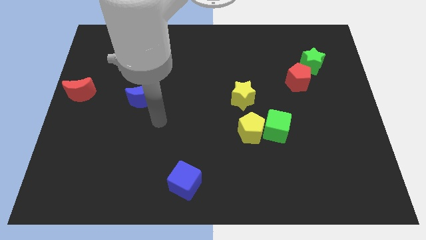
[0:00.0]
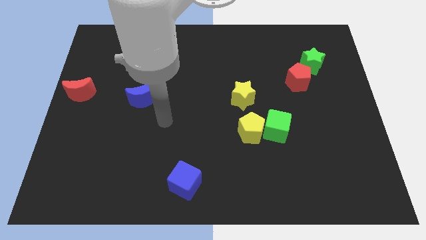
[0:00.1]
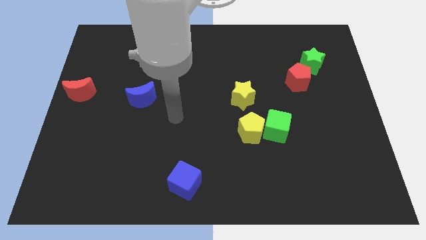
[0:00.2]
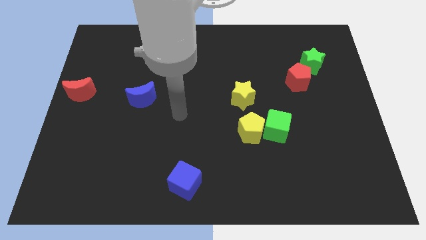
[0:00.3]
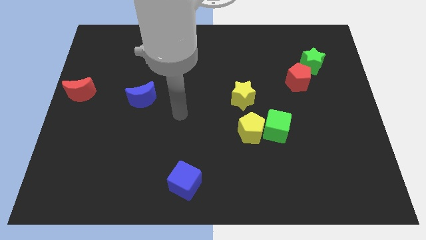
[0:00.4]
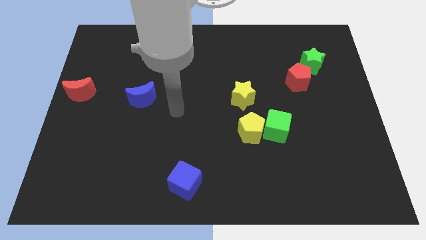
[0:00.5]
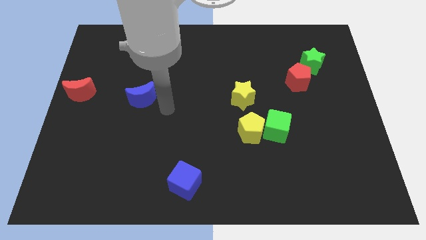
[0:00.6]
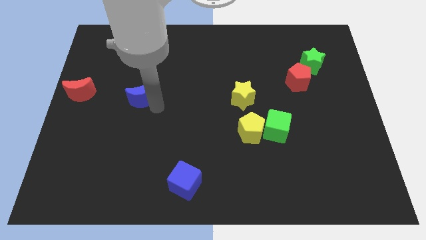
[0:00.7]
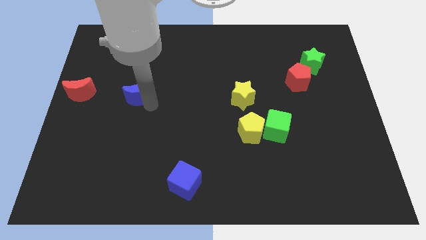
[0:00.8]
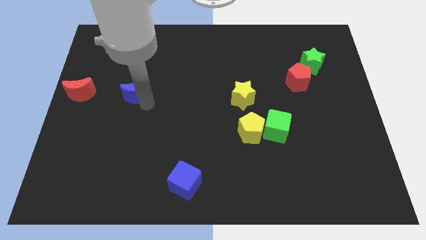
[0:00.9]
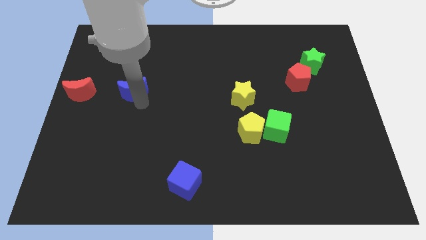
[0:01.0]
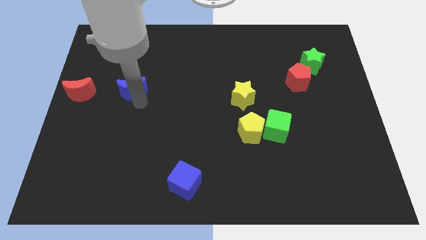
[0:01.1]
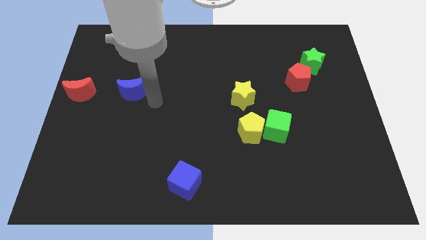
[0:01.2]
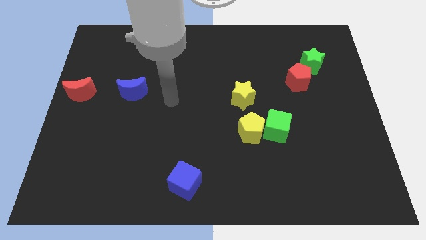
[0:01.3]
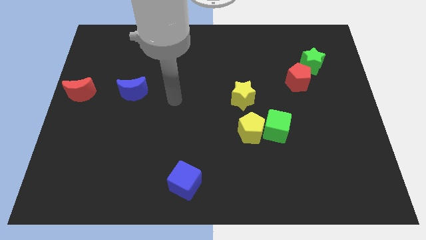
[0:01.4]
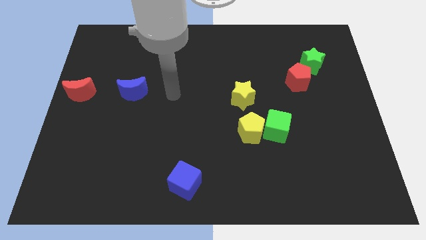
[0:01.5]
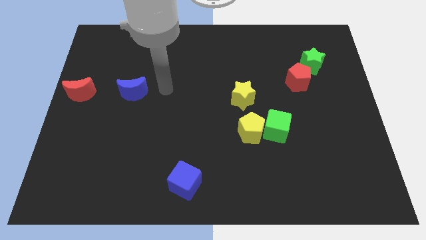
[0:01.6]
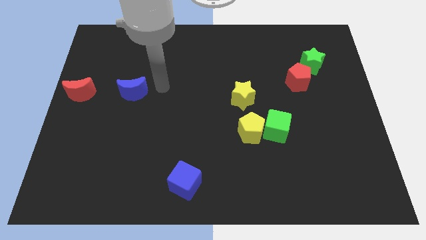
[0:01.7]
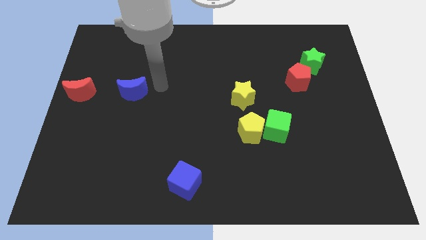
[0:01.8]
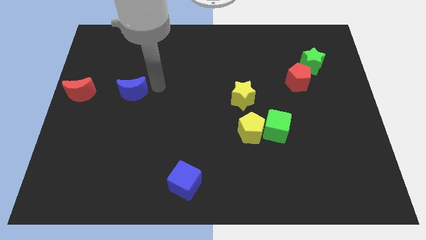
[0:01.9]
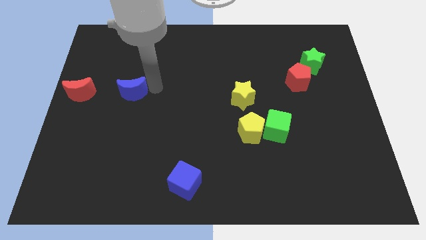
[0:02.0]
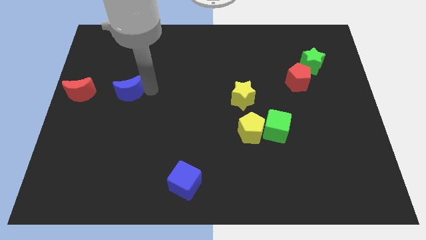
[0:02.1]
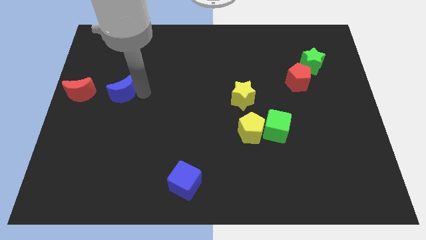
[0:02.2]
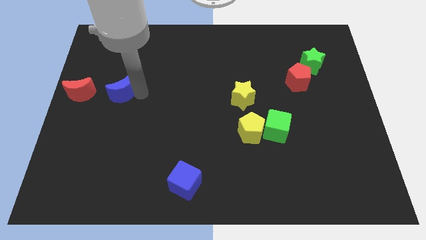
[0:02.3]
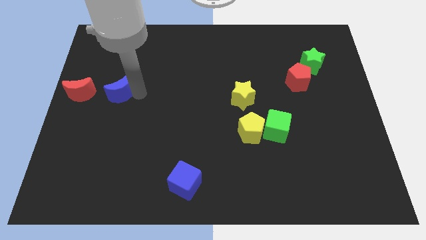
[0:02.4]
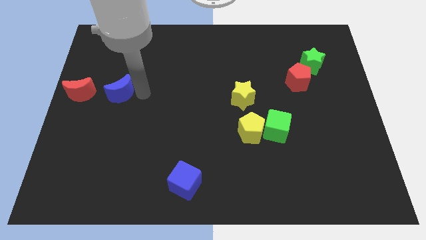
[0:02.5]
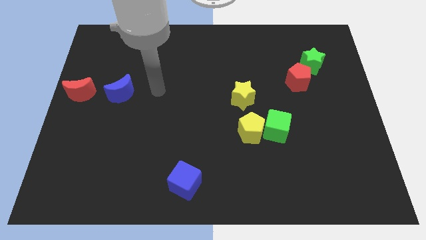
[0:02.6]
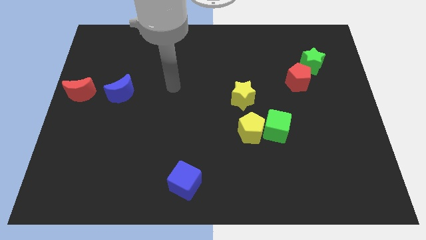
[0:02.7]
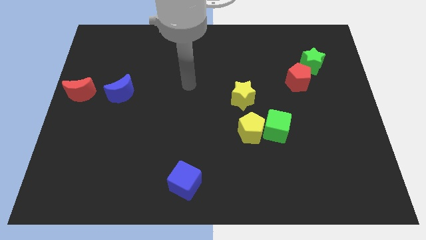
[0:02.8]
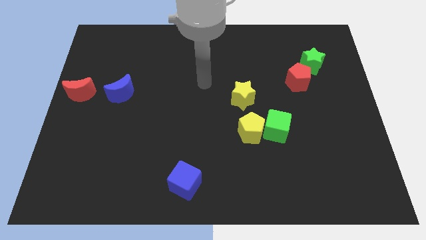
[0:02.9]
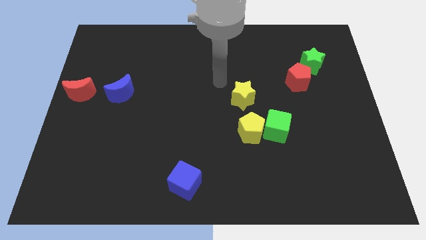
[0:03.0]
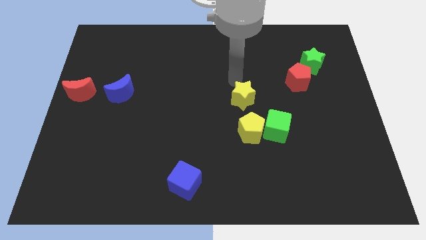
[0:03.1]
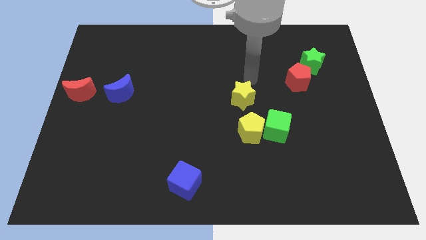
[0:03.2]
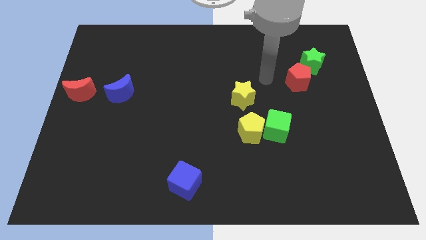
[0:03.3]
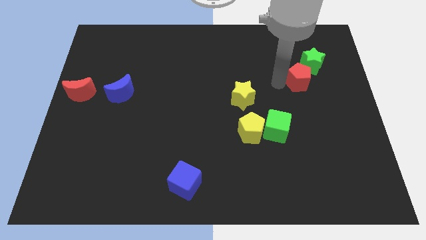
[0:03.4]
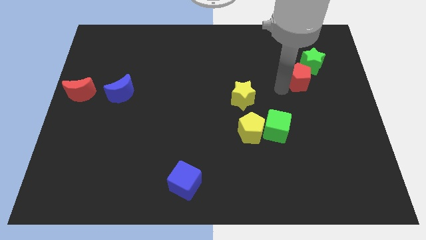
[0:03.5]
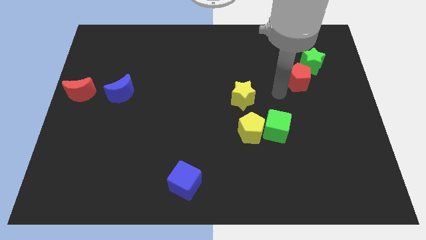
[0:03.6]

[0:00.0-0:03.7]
push the blue moon towards the center left

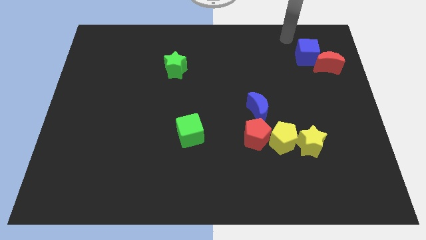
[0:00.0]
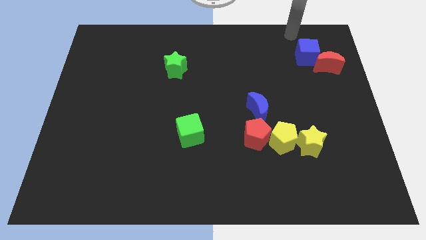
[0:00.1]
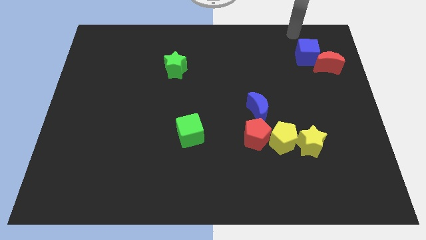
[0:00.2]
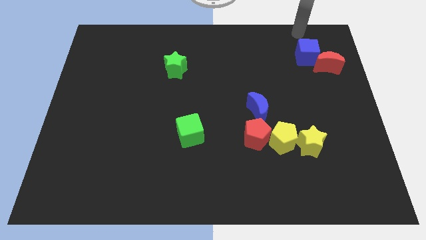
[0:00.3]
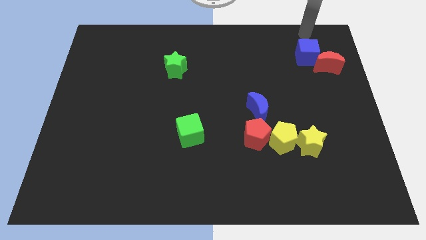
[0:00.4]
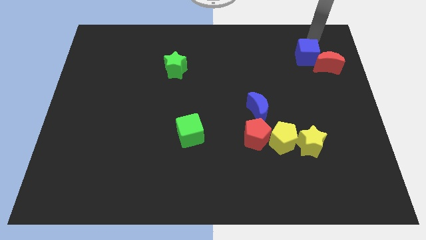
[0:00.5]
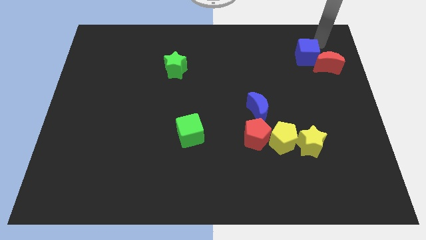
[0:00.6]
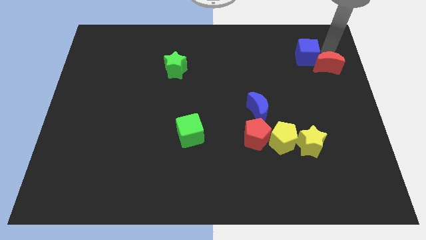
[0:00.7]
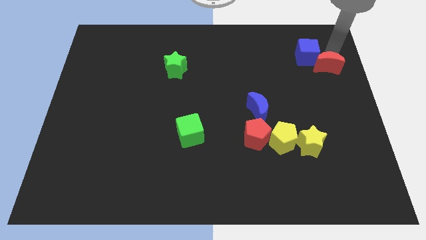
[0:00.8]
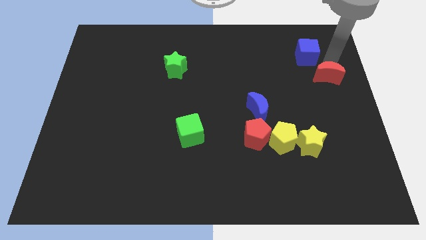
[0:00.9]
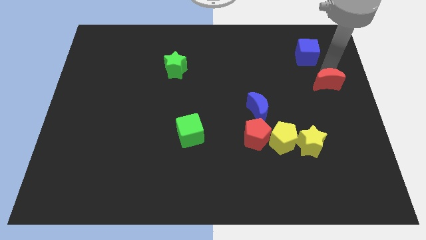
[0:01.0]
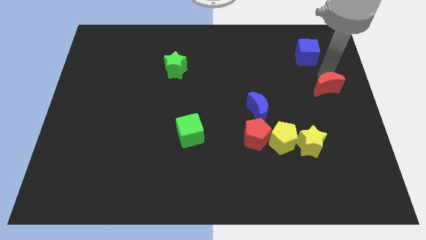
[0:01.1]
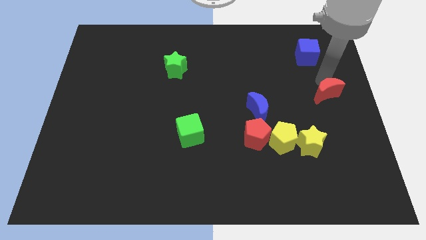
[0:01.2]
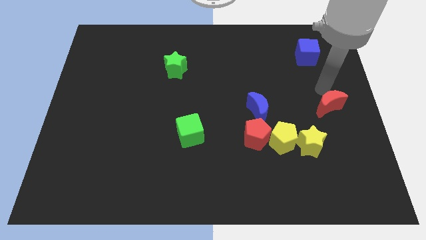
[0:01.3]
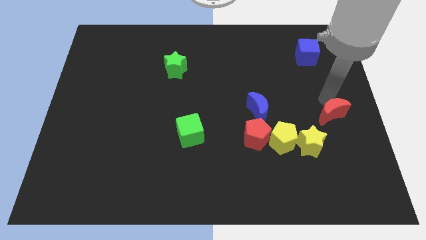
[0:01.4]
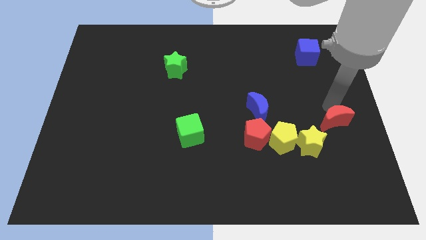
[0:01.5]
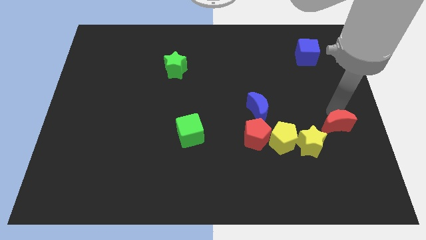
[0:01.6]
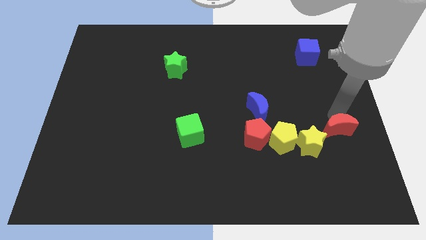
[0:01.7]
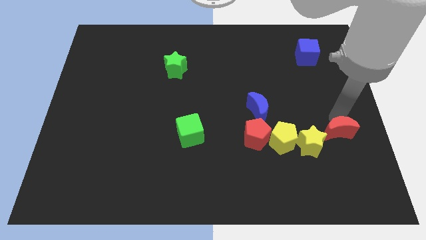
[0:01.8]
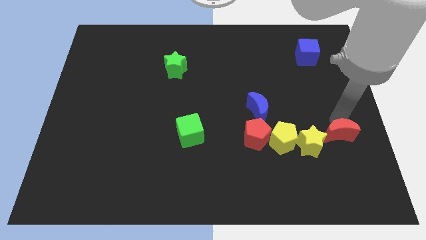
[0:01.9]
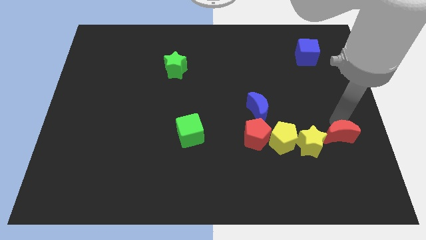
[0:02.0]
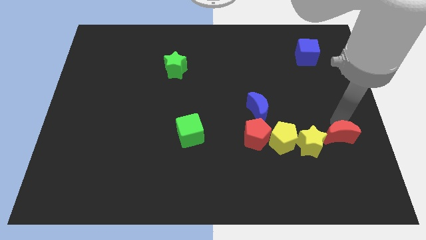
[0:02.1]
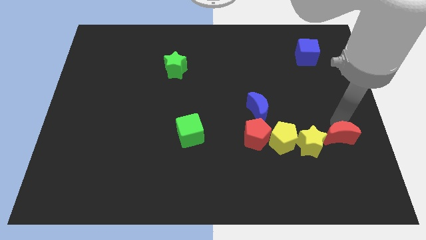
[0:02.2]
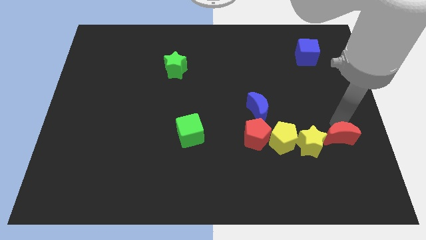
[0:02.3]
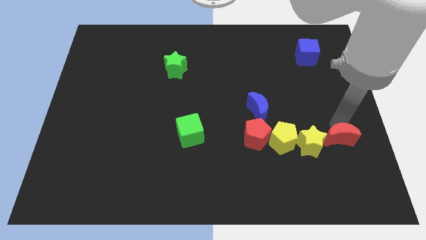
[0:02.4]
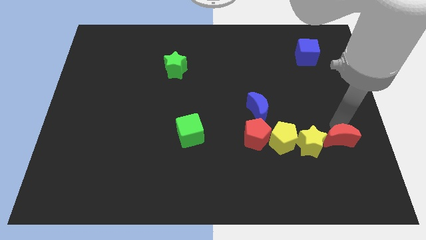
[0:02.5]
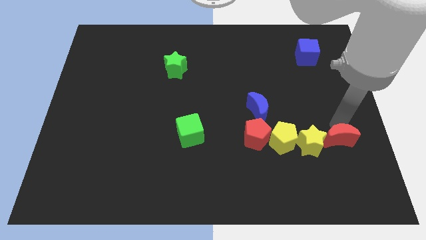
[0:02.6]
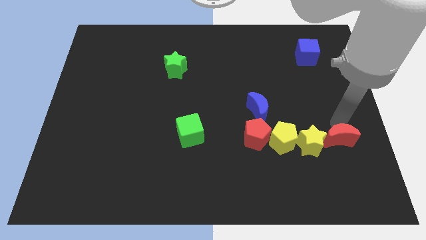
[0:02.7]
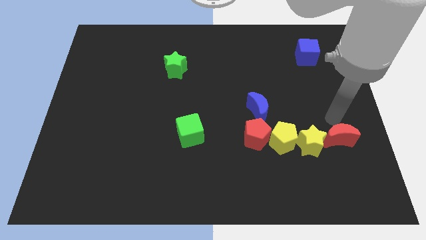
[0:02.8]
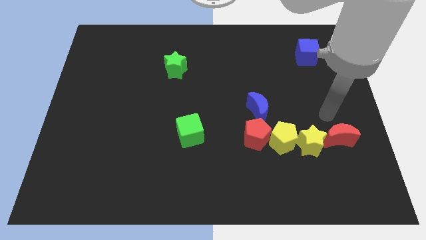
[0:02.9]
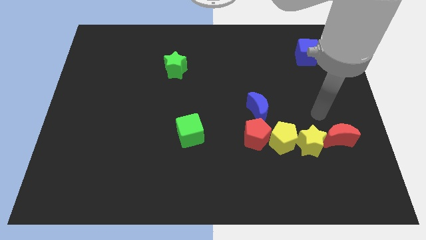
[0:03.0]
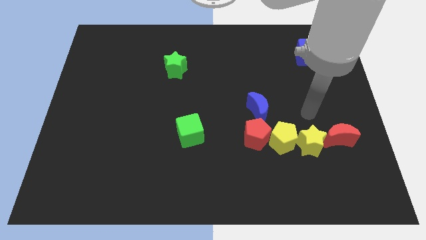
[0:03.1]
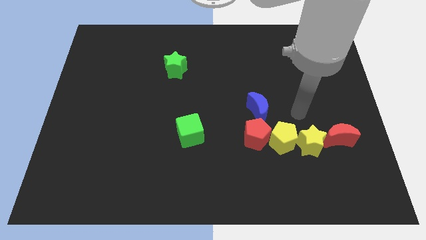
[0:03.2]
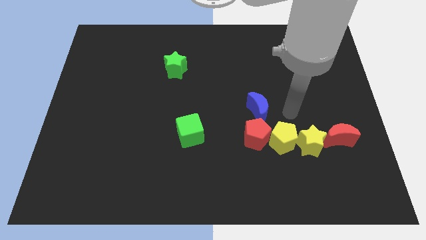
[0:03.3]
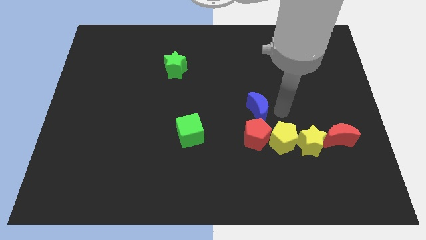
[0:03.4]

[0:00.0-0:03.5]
move the red crescent right to the yellow star

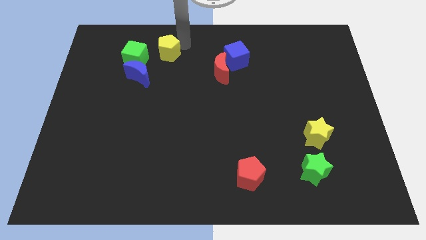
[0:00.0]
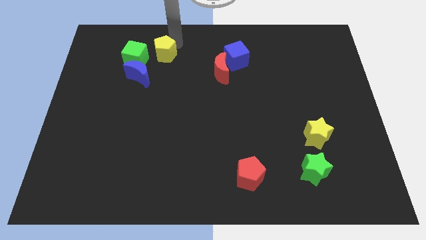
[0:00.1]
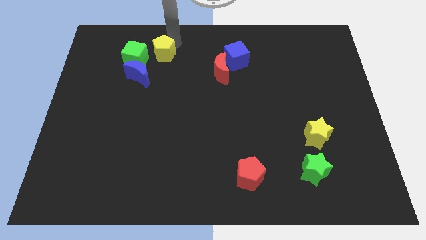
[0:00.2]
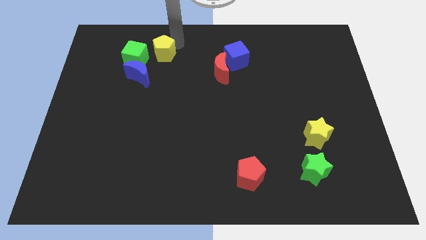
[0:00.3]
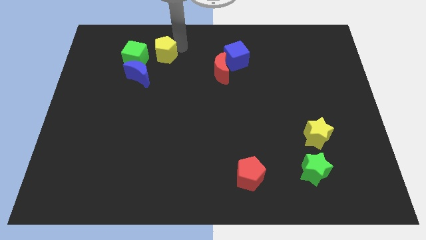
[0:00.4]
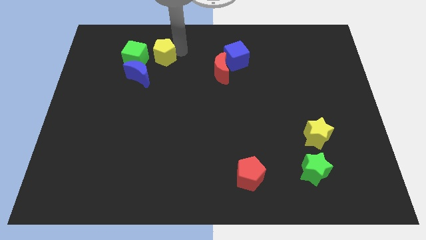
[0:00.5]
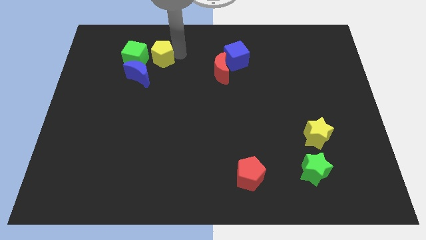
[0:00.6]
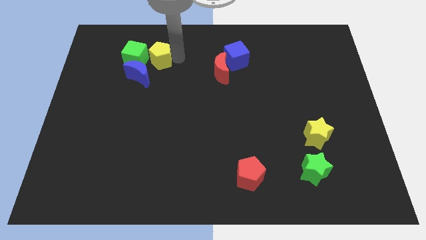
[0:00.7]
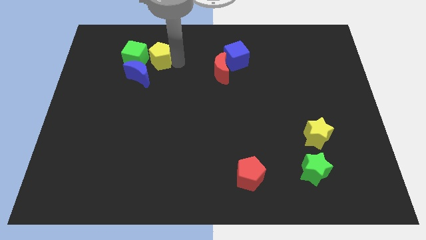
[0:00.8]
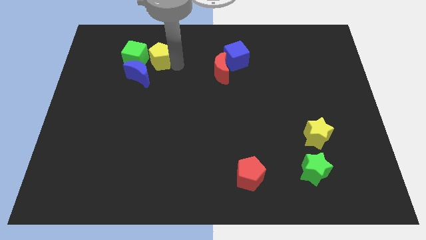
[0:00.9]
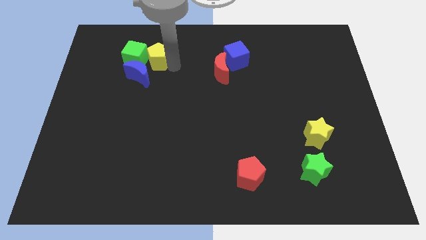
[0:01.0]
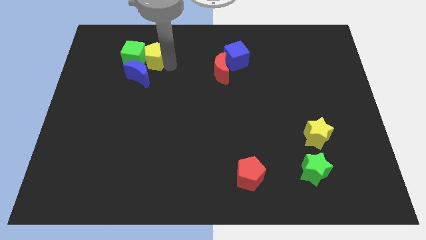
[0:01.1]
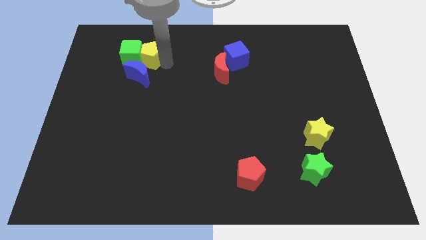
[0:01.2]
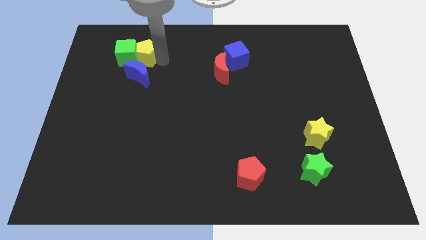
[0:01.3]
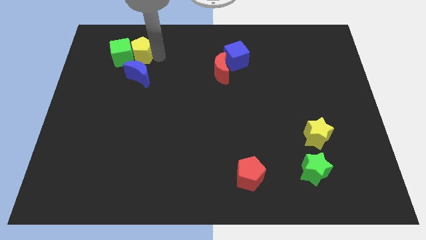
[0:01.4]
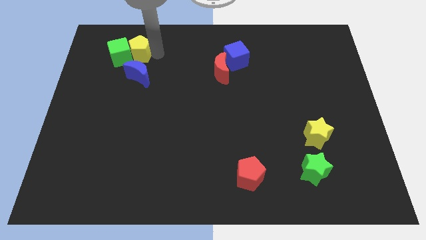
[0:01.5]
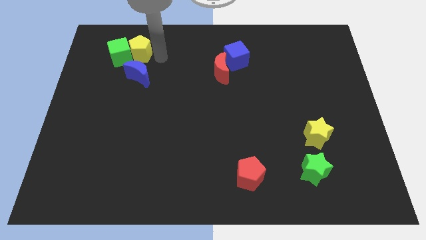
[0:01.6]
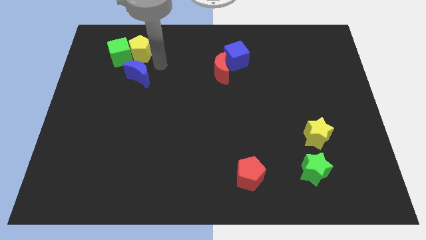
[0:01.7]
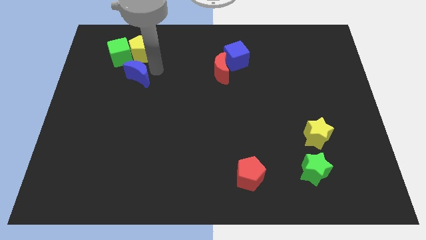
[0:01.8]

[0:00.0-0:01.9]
move the yellow pentagon to the right of the green cube
